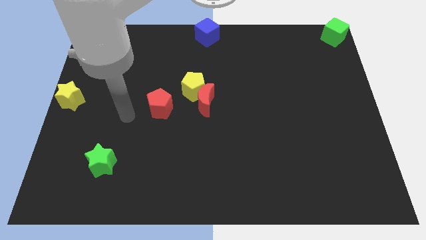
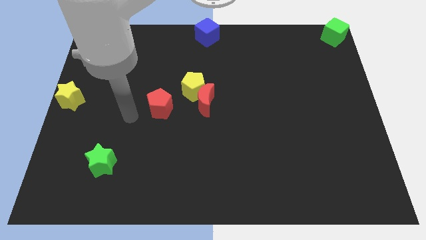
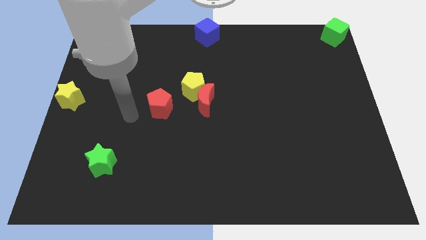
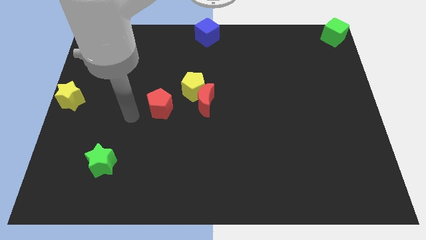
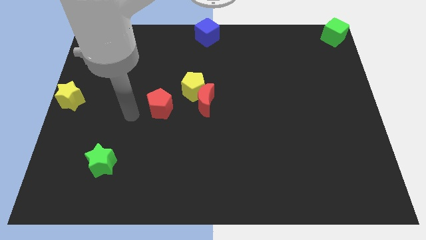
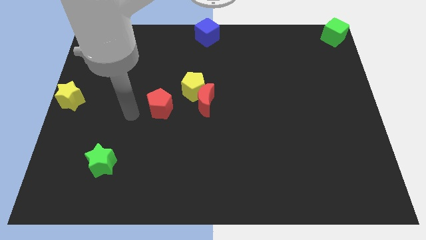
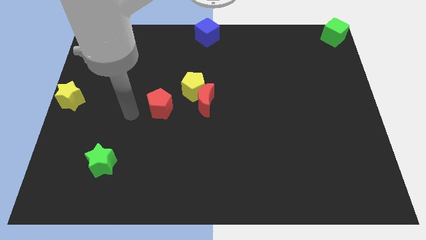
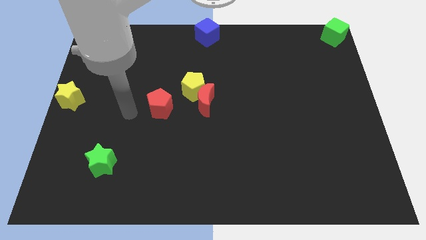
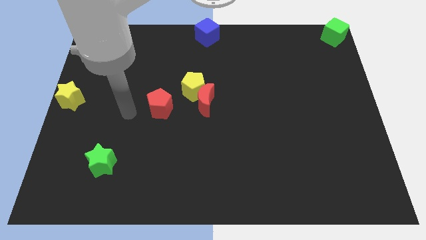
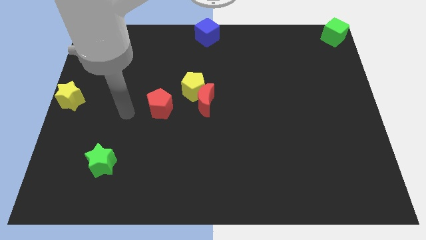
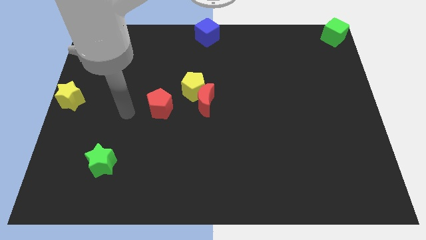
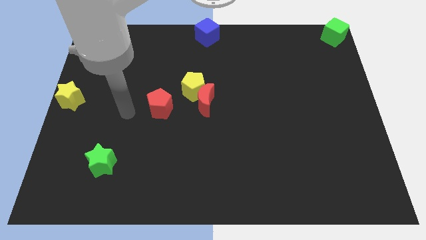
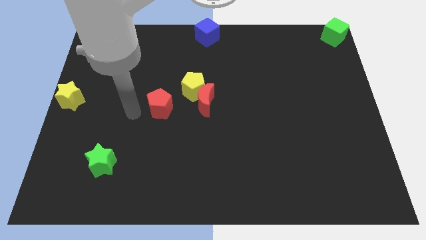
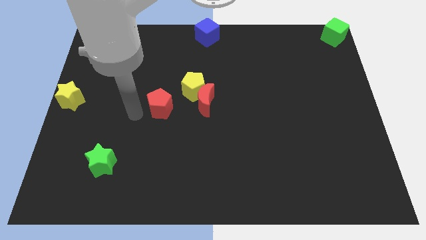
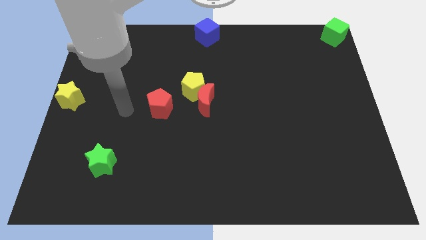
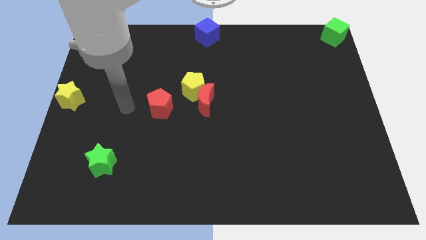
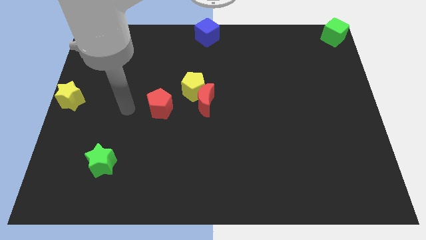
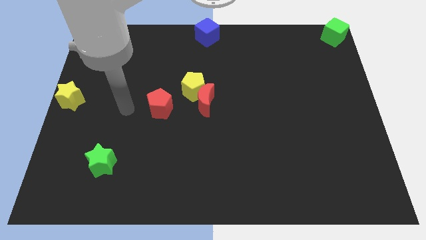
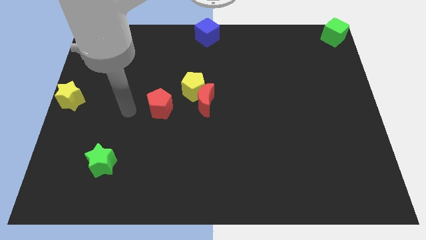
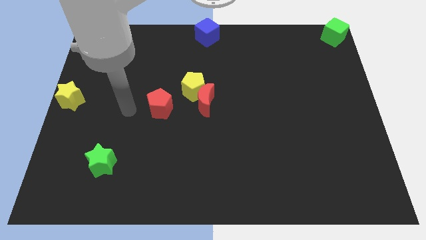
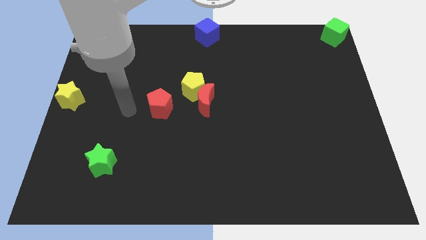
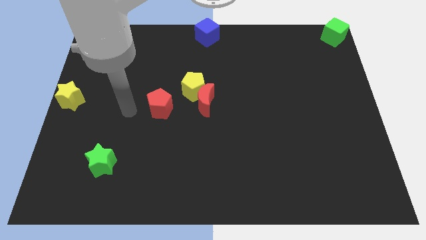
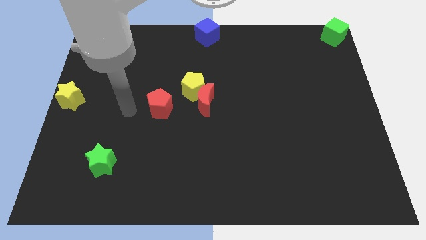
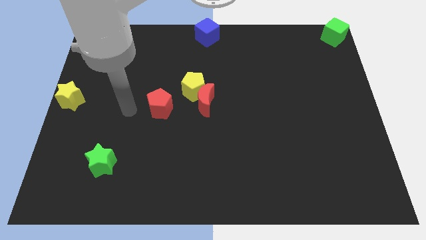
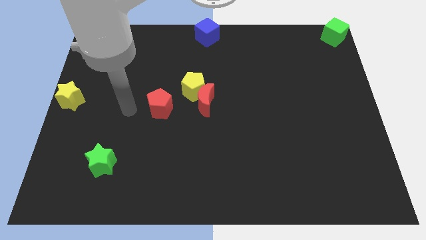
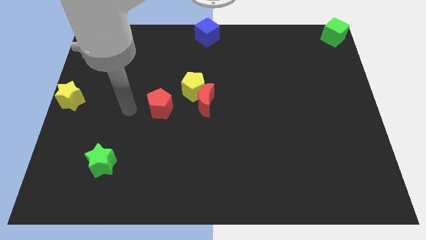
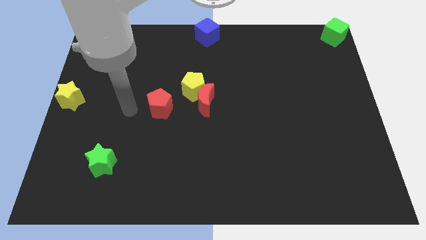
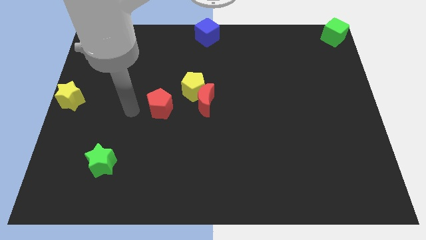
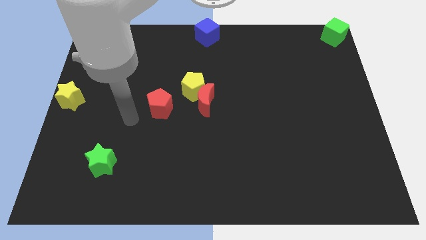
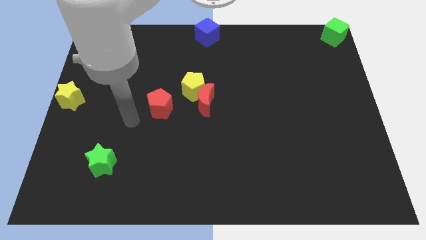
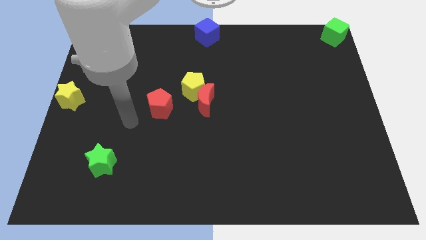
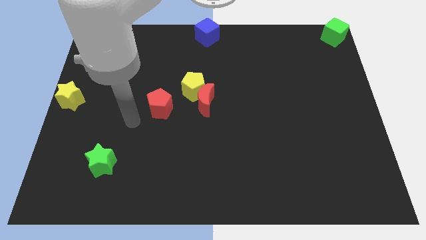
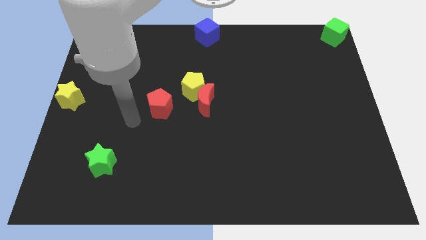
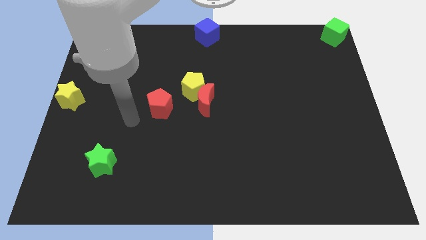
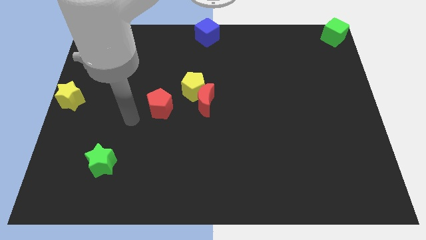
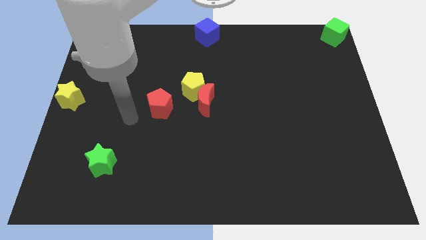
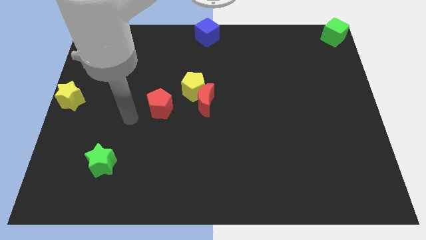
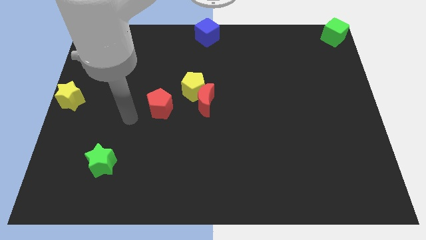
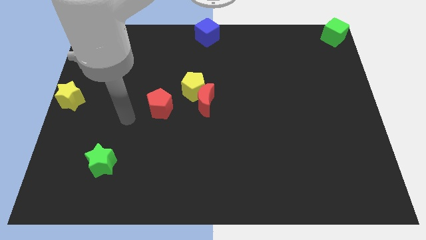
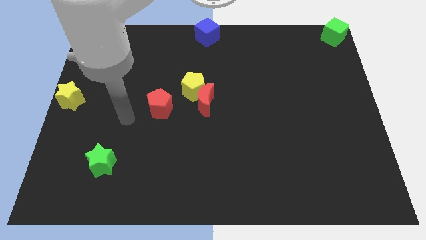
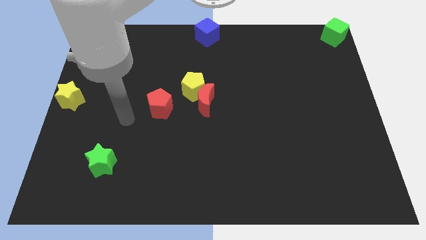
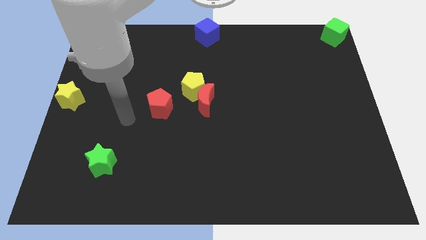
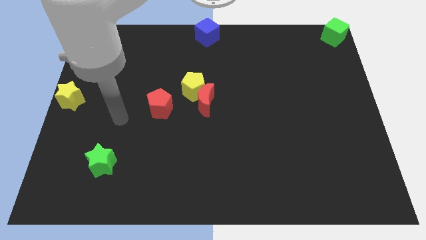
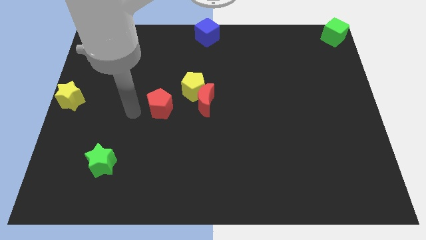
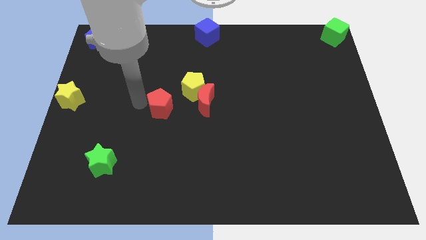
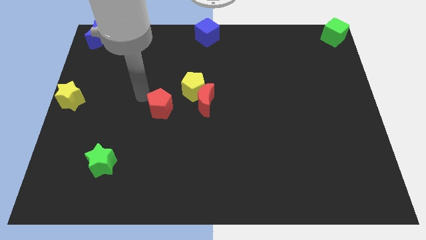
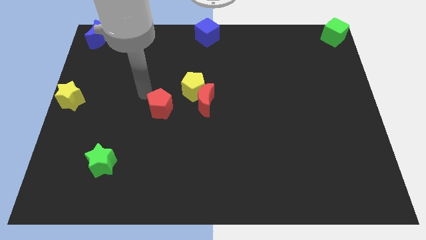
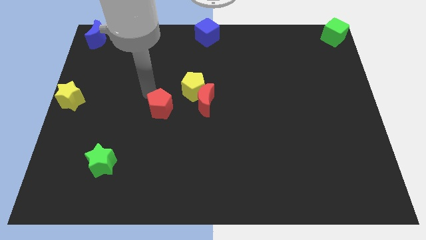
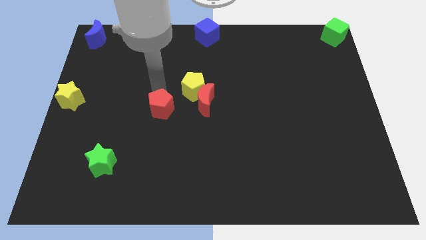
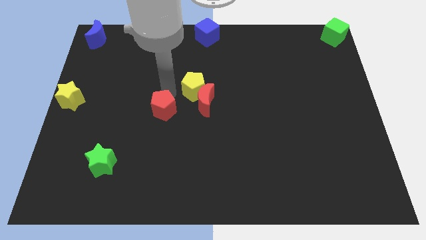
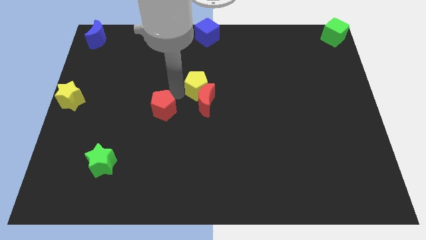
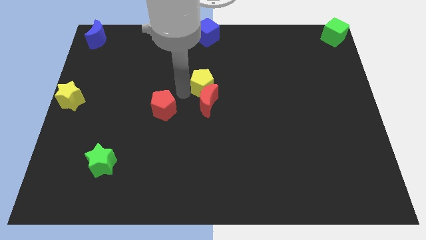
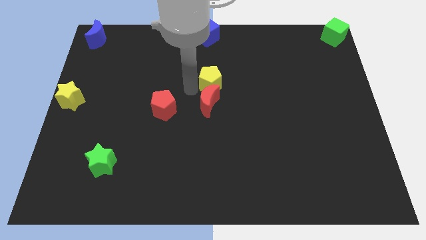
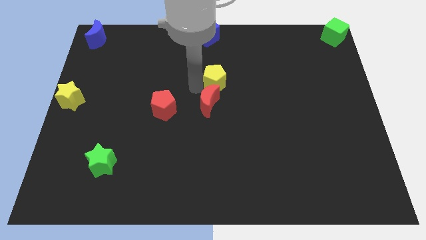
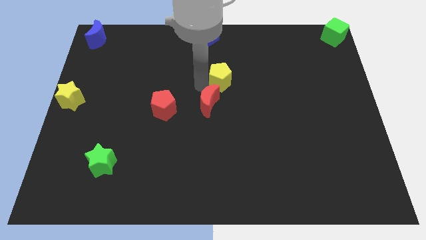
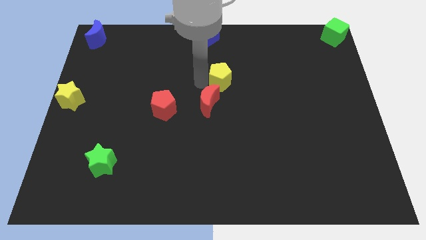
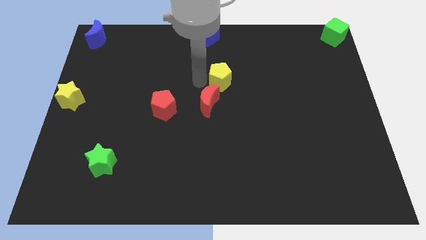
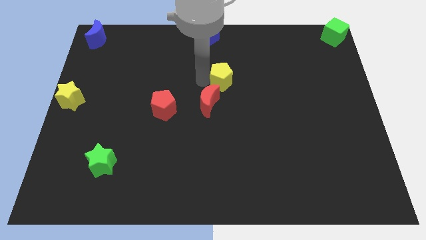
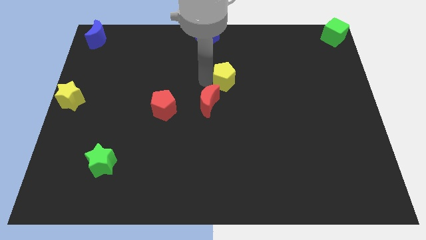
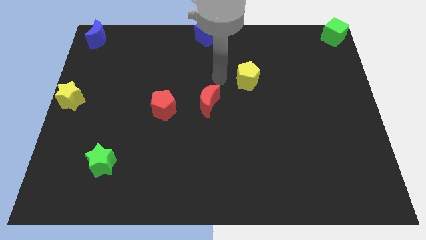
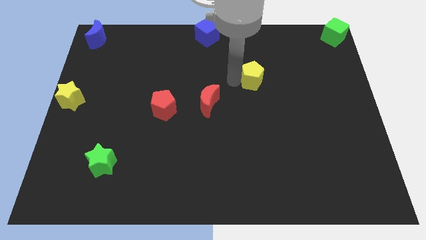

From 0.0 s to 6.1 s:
separate the yellow pentagon from the red moon

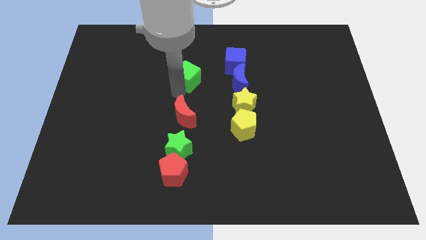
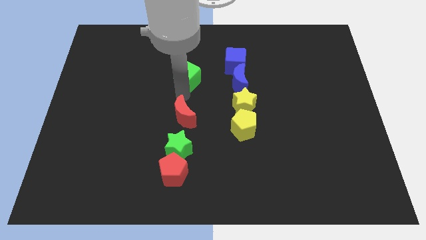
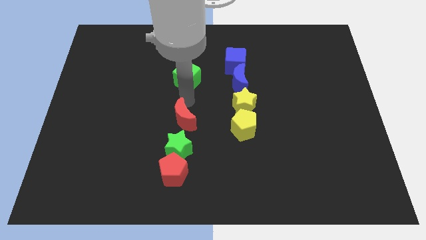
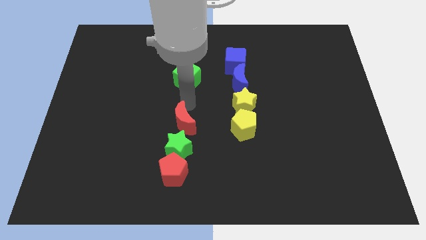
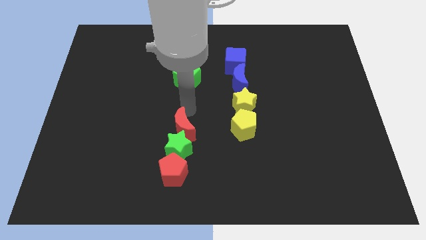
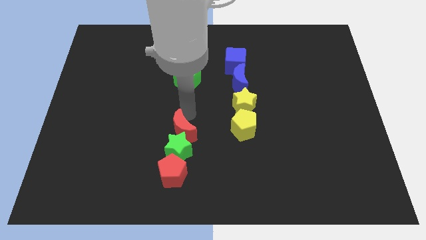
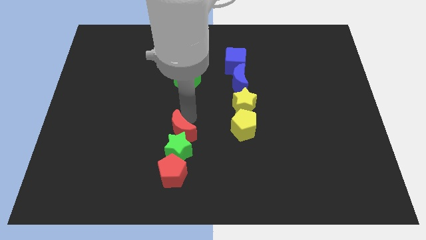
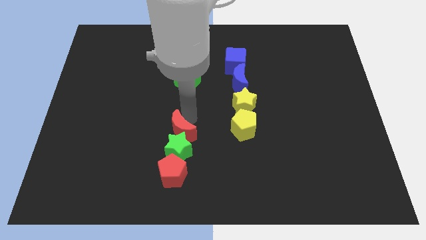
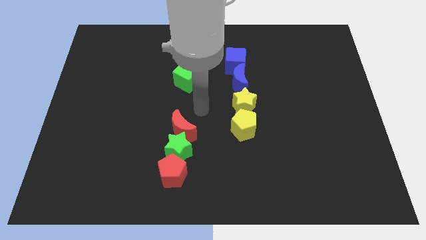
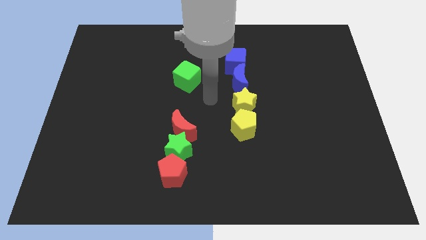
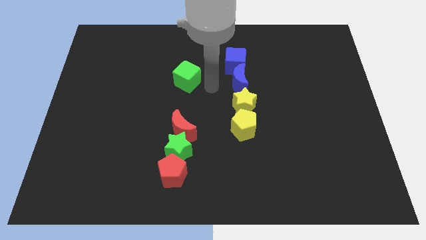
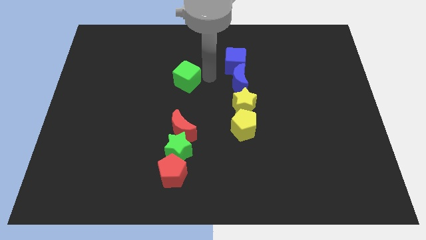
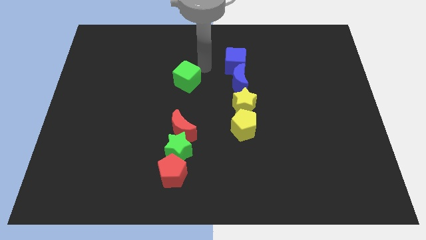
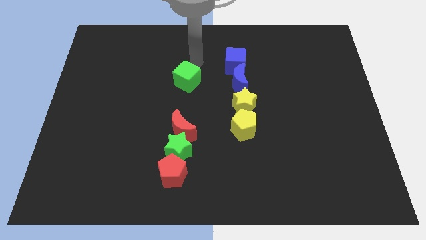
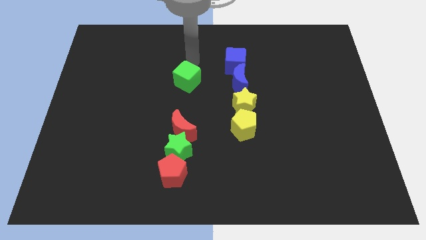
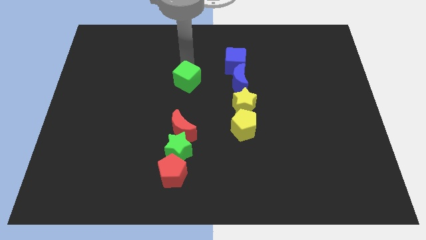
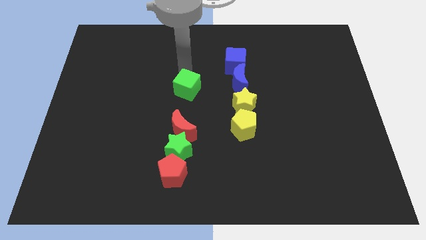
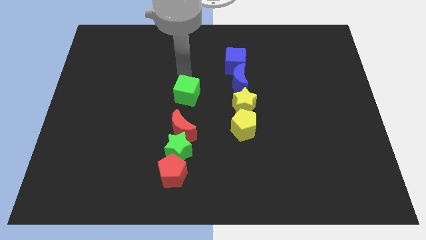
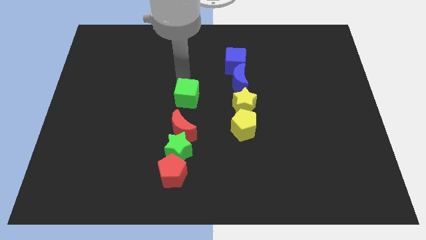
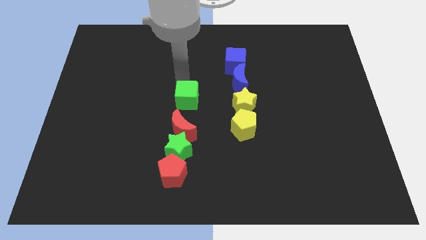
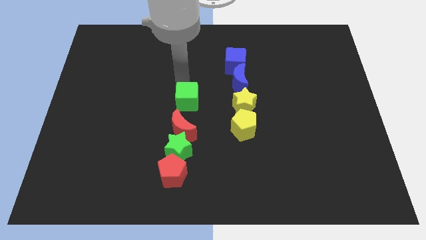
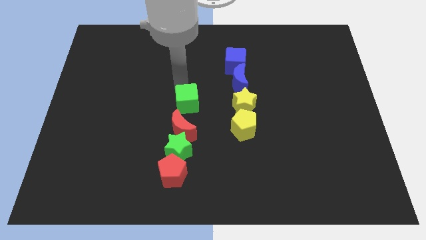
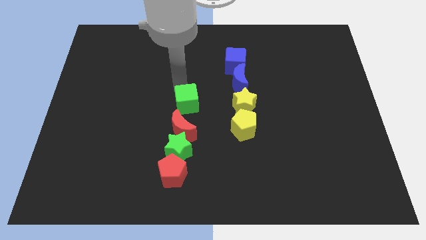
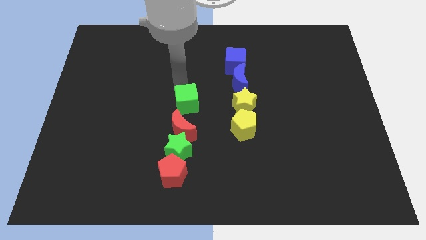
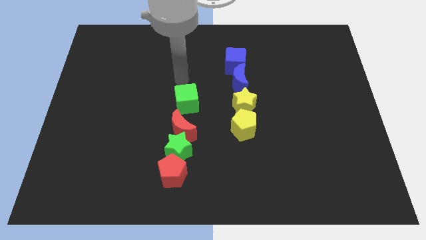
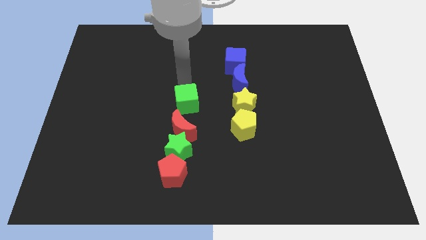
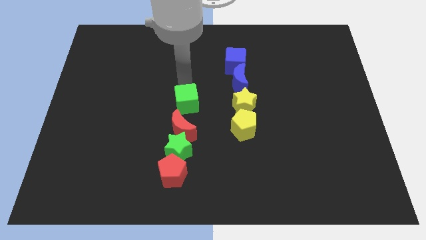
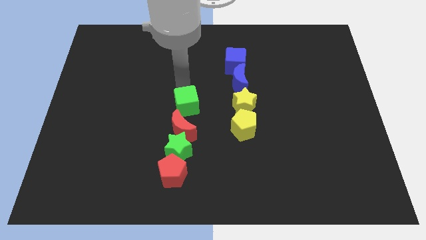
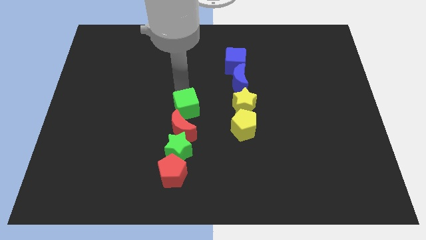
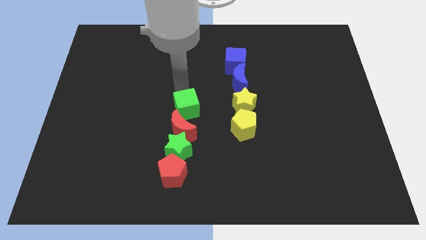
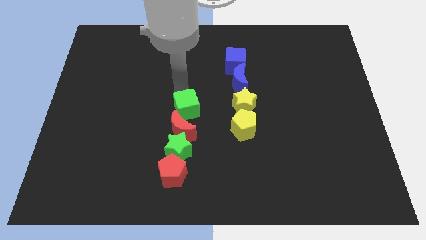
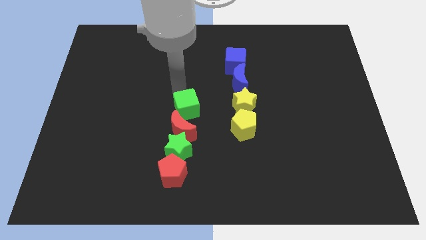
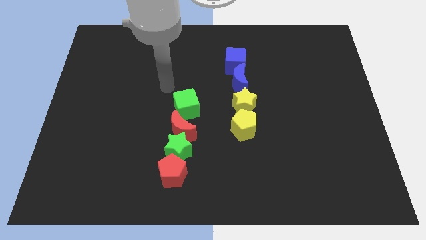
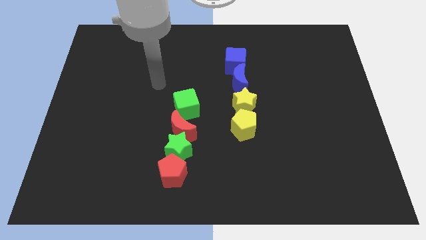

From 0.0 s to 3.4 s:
place the red moon and green cube to the top side of the green star
